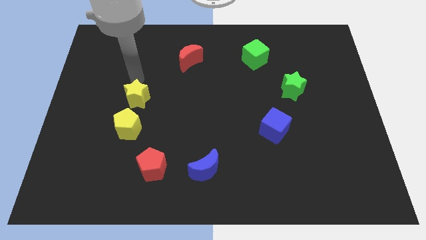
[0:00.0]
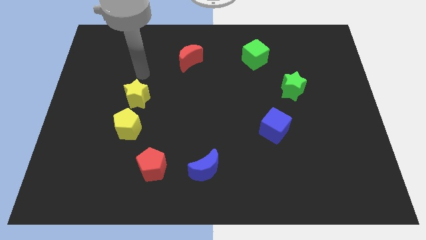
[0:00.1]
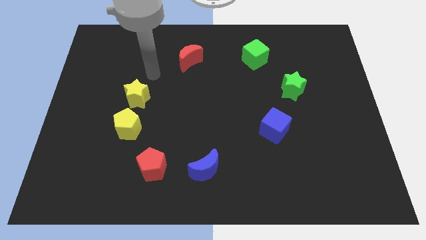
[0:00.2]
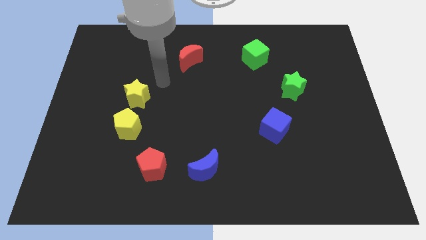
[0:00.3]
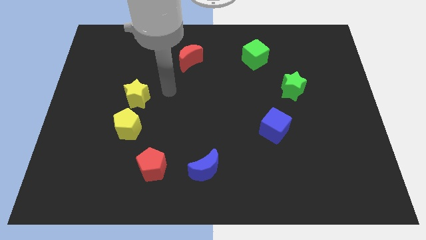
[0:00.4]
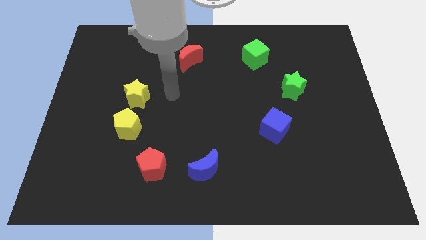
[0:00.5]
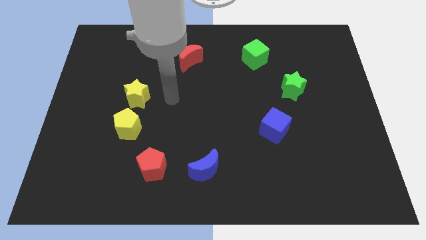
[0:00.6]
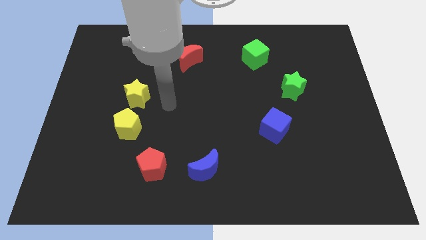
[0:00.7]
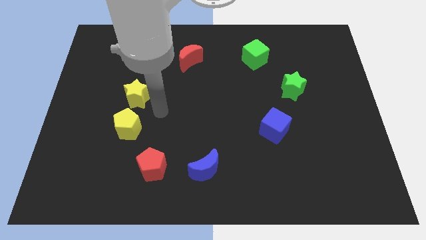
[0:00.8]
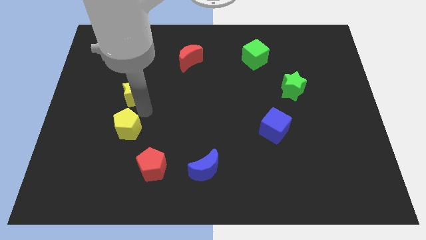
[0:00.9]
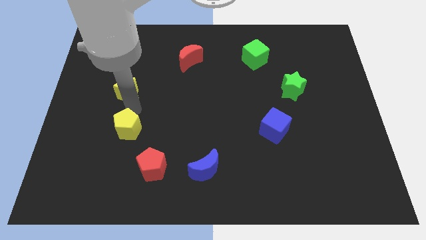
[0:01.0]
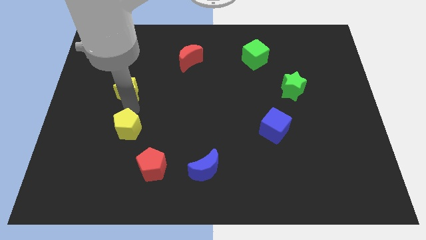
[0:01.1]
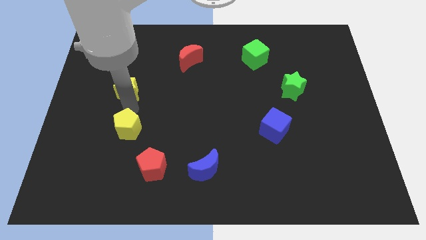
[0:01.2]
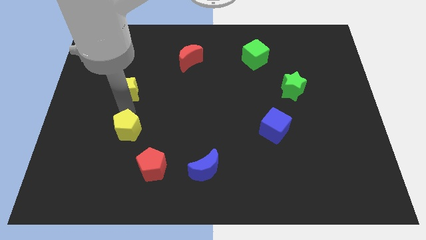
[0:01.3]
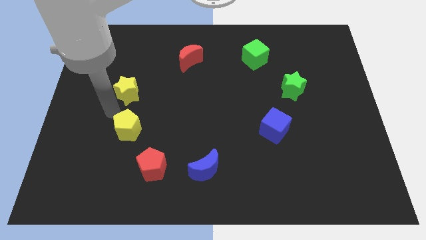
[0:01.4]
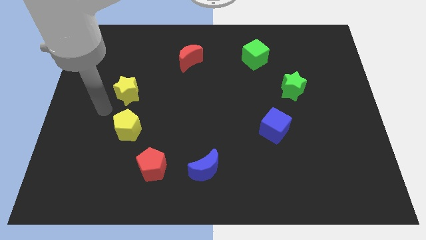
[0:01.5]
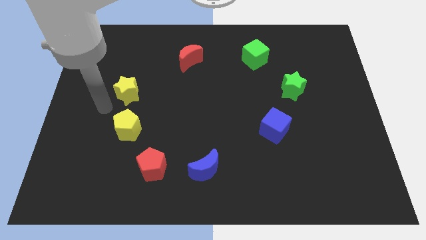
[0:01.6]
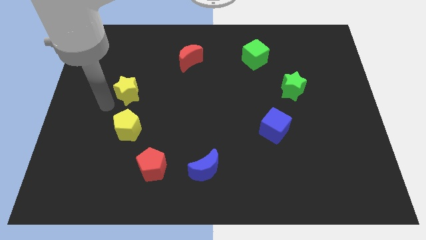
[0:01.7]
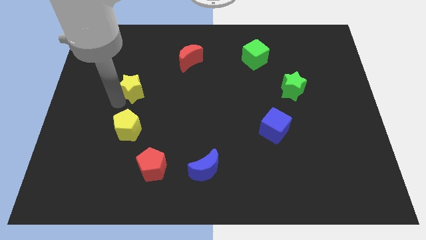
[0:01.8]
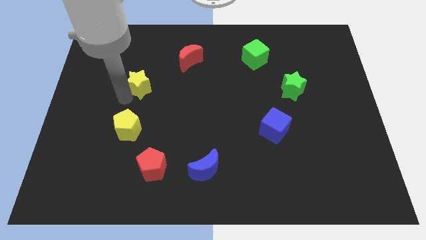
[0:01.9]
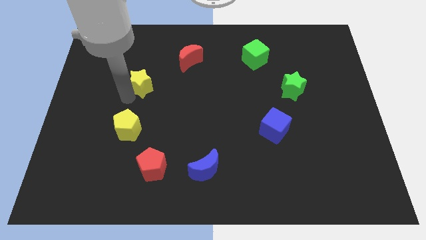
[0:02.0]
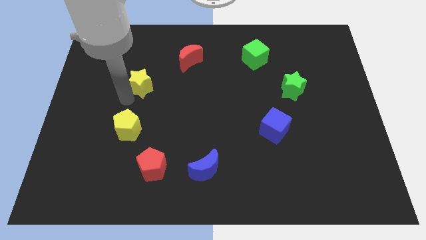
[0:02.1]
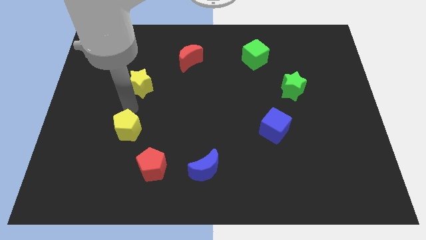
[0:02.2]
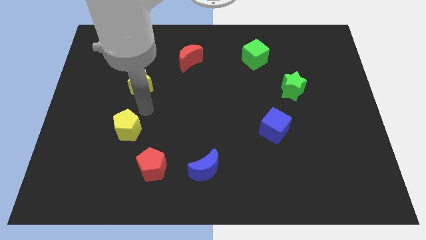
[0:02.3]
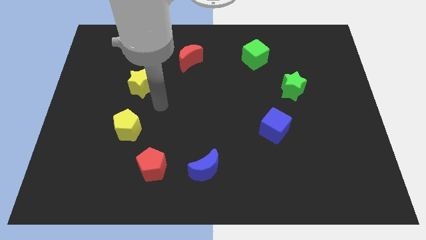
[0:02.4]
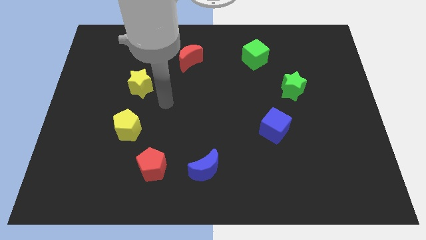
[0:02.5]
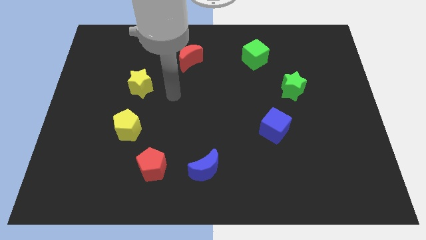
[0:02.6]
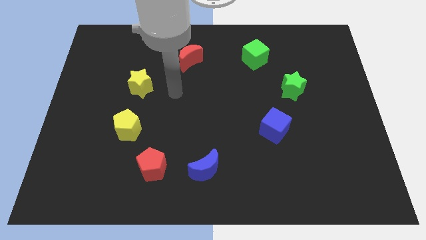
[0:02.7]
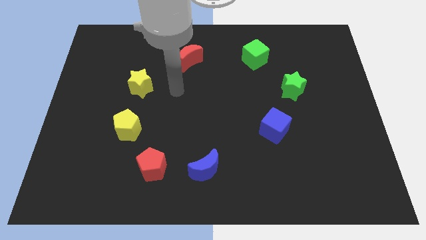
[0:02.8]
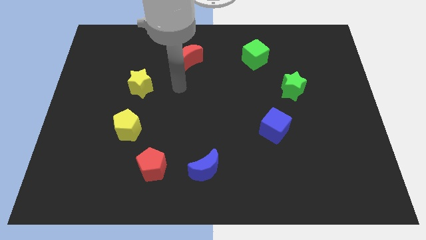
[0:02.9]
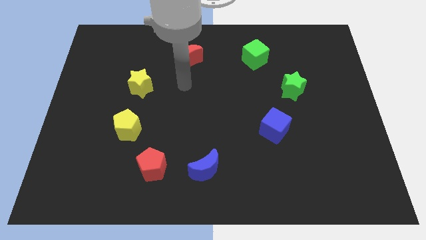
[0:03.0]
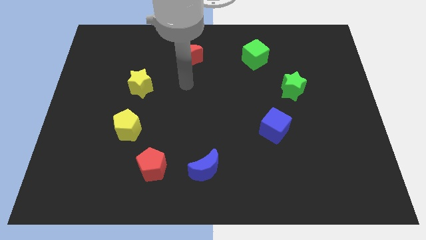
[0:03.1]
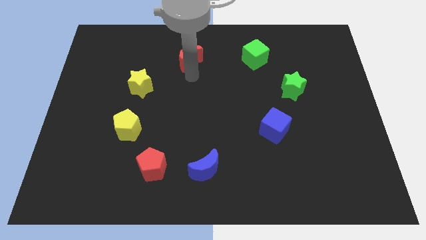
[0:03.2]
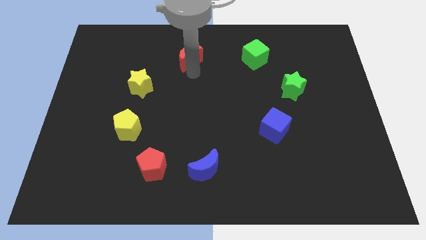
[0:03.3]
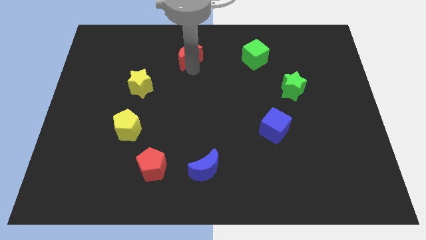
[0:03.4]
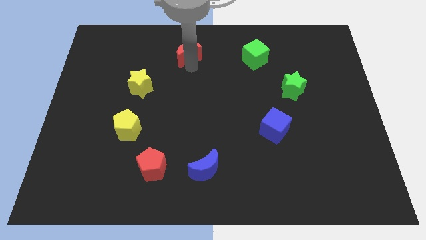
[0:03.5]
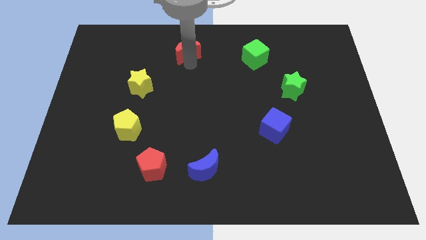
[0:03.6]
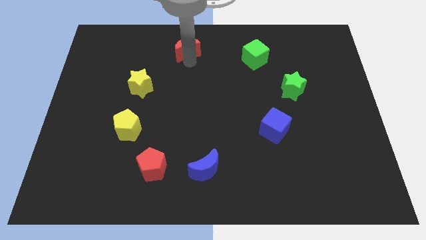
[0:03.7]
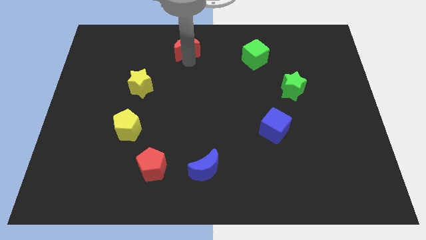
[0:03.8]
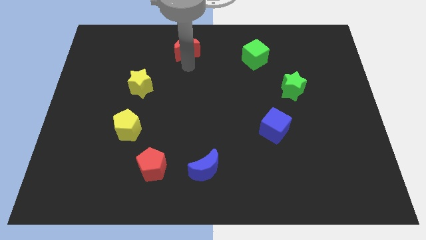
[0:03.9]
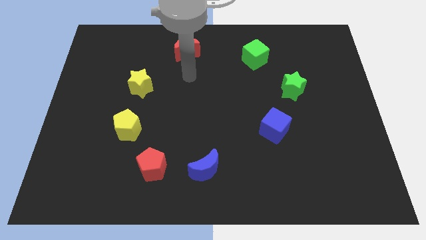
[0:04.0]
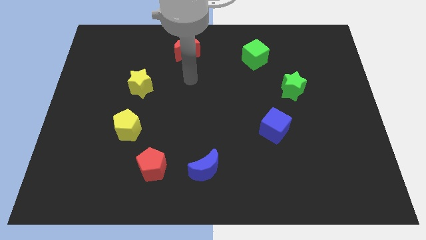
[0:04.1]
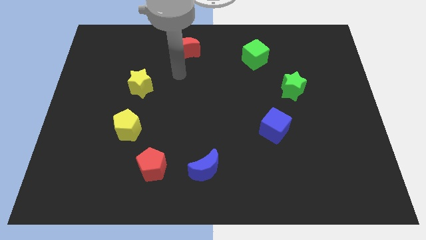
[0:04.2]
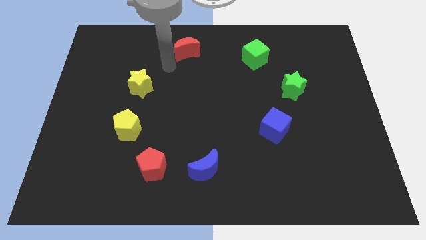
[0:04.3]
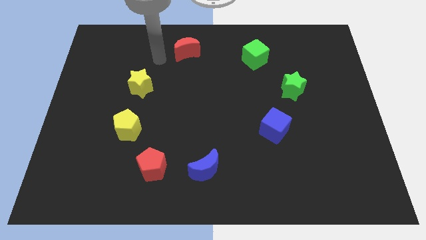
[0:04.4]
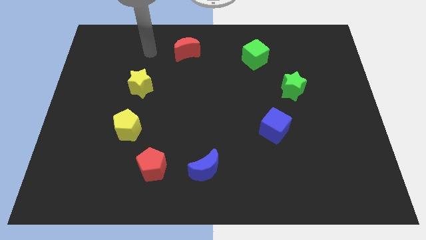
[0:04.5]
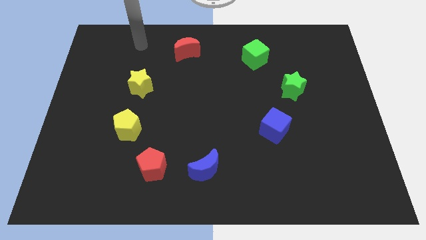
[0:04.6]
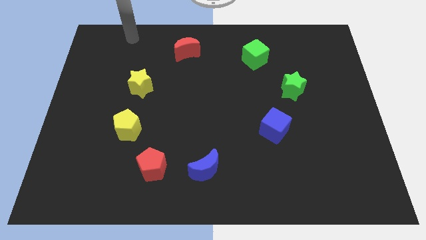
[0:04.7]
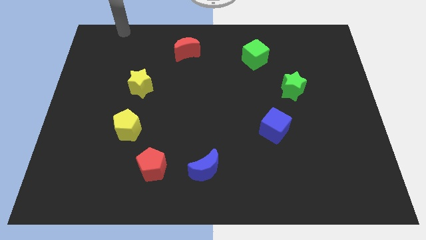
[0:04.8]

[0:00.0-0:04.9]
form a circle using all the blocks

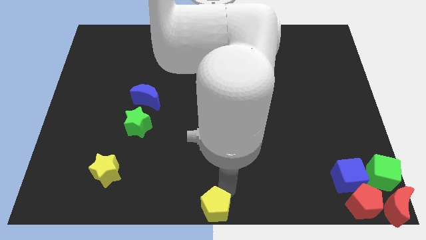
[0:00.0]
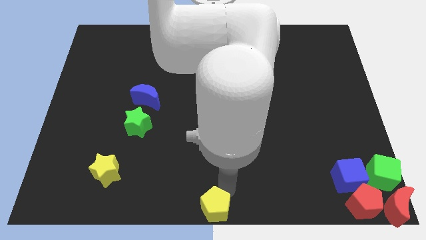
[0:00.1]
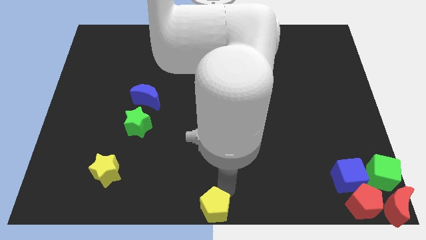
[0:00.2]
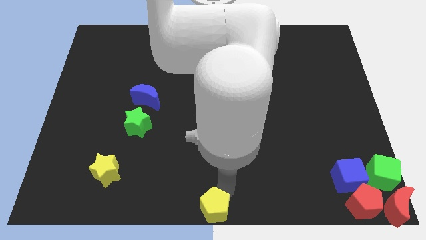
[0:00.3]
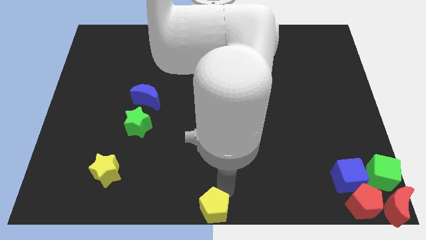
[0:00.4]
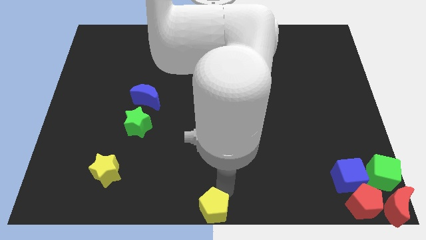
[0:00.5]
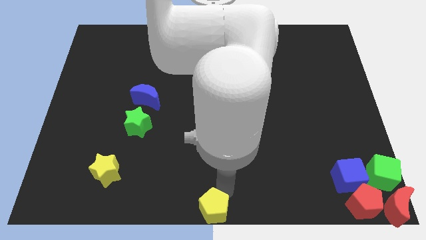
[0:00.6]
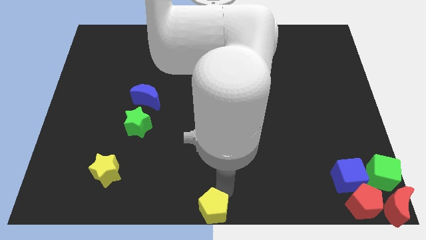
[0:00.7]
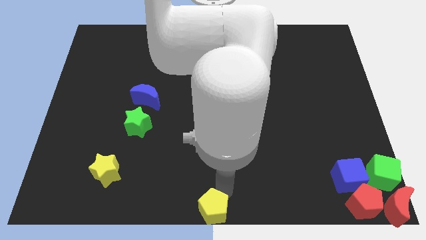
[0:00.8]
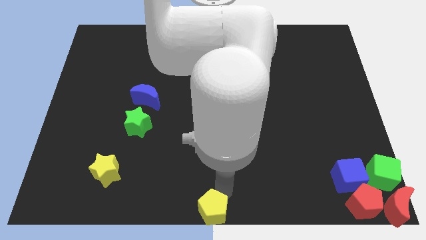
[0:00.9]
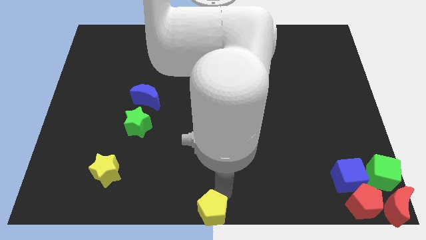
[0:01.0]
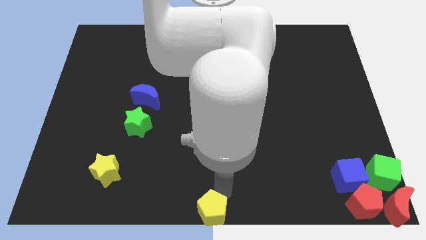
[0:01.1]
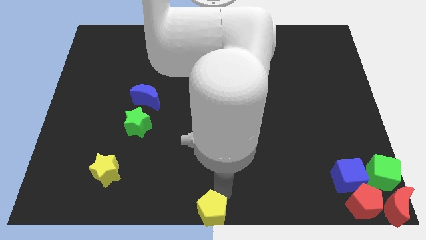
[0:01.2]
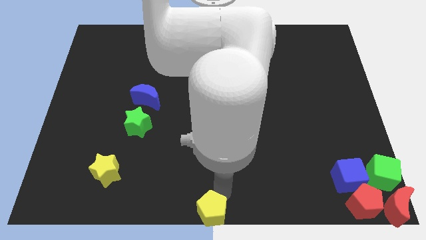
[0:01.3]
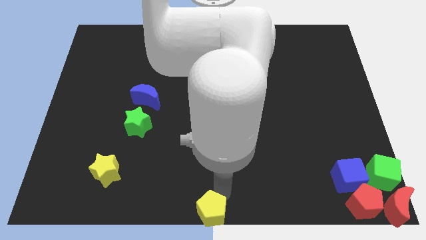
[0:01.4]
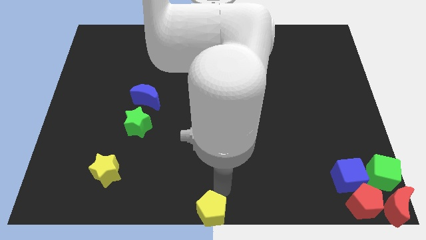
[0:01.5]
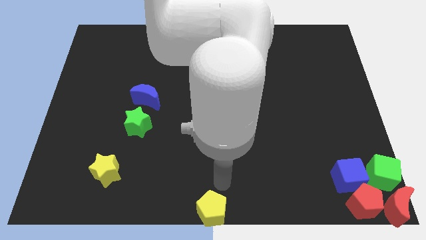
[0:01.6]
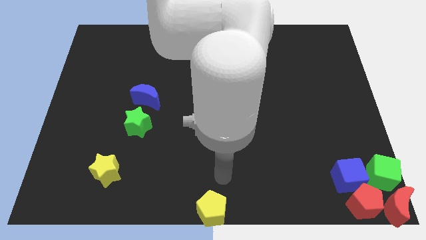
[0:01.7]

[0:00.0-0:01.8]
place the yellow pentagon at the bottom center of the board

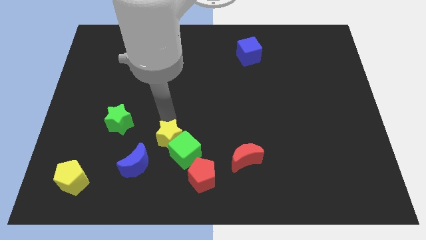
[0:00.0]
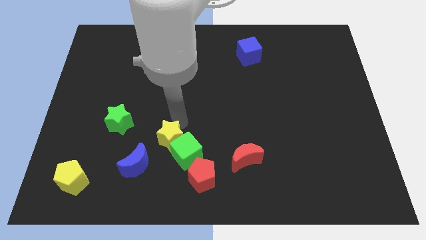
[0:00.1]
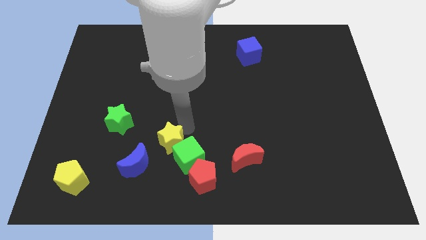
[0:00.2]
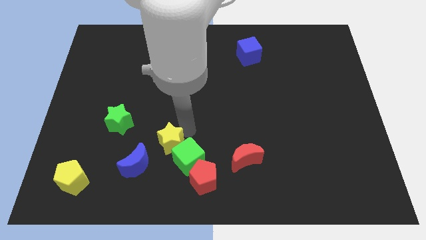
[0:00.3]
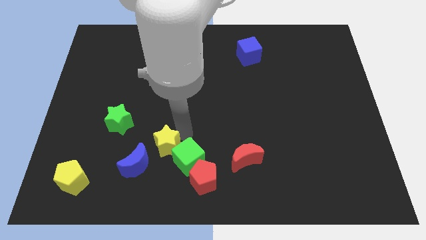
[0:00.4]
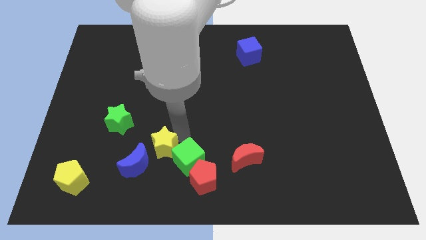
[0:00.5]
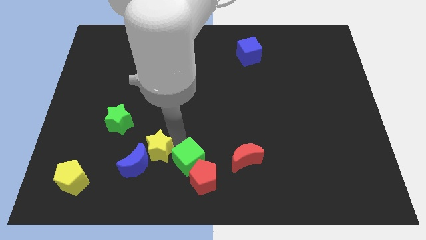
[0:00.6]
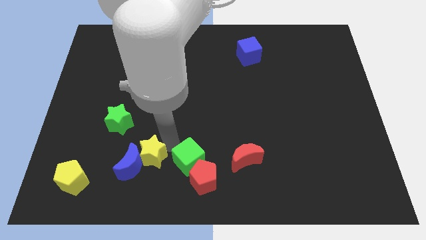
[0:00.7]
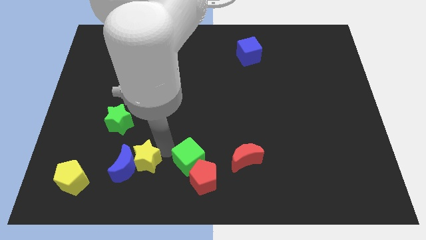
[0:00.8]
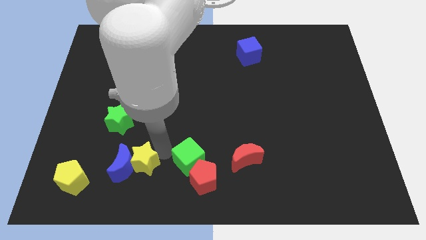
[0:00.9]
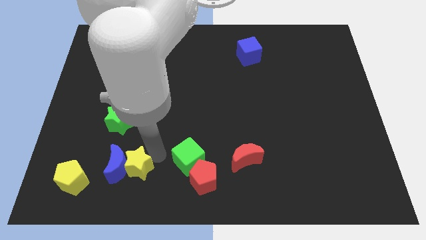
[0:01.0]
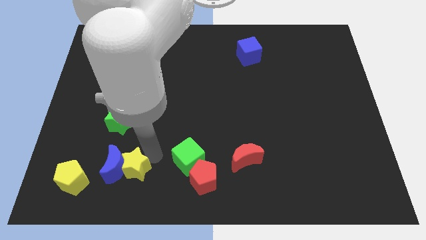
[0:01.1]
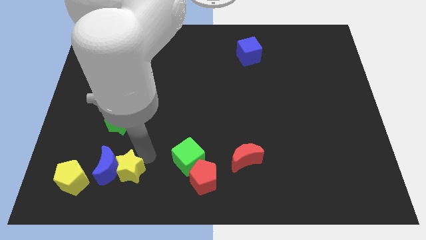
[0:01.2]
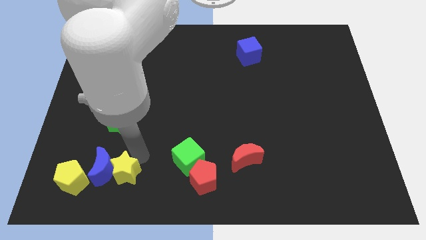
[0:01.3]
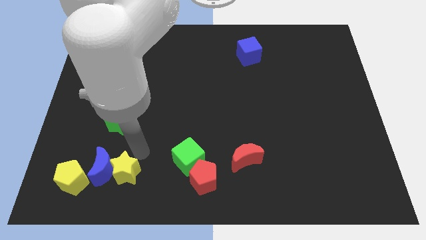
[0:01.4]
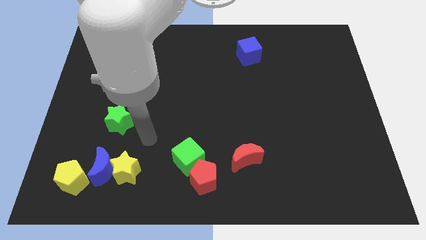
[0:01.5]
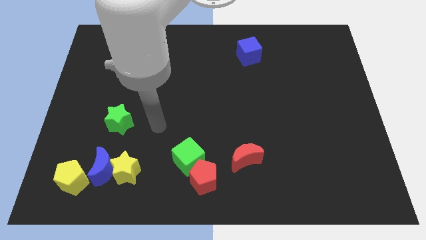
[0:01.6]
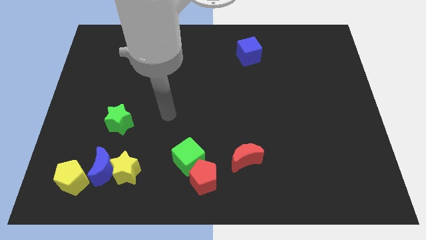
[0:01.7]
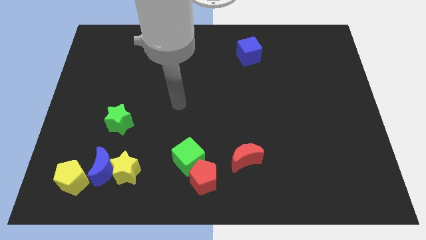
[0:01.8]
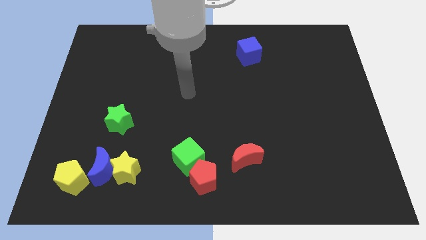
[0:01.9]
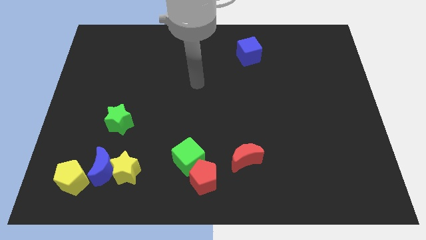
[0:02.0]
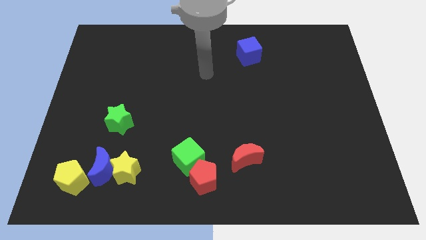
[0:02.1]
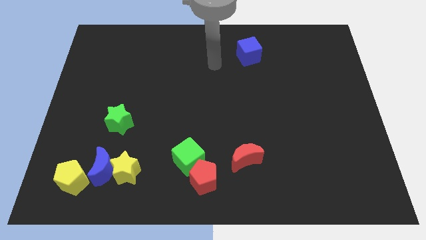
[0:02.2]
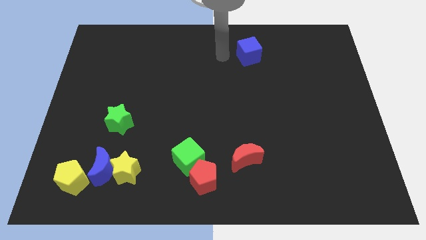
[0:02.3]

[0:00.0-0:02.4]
move the yellow star to the right of blue crescent
